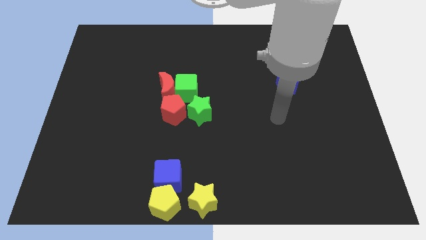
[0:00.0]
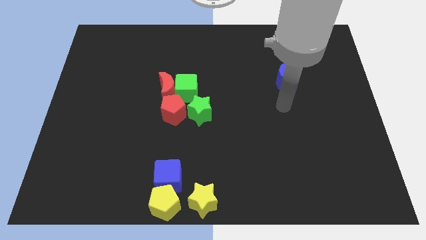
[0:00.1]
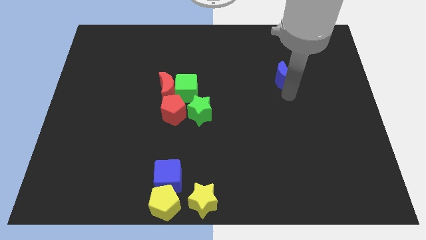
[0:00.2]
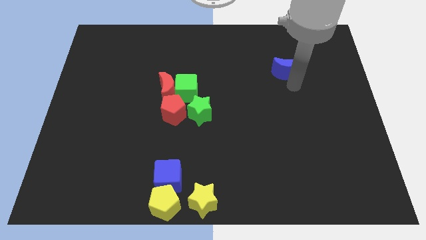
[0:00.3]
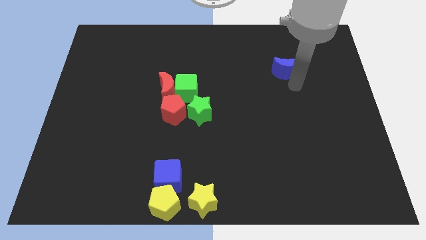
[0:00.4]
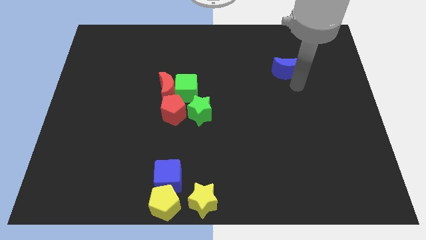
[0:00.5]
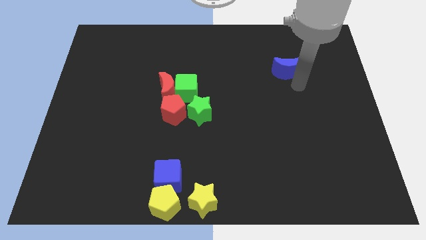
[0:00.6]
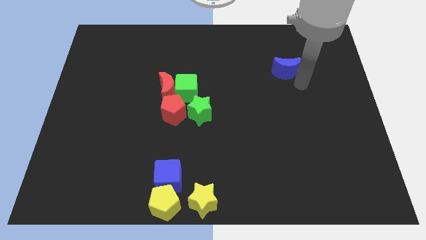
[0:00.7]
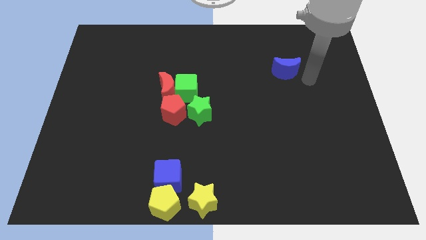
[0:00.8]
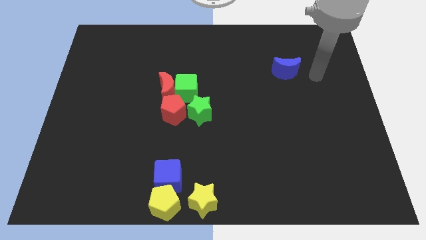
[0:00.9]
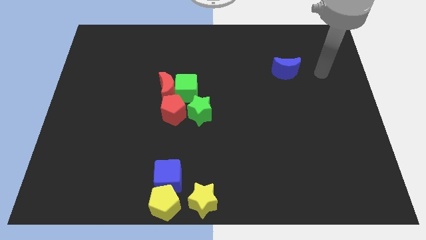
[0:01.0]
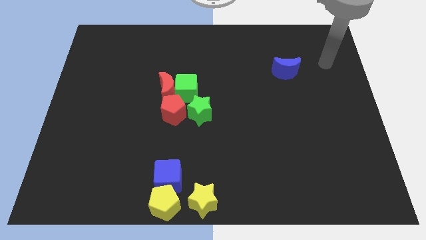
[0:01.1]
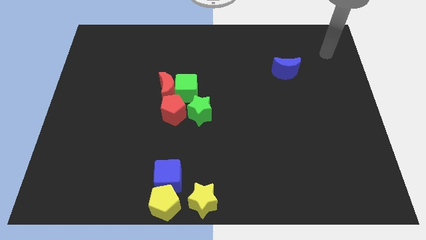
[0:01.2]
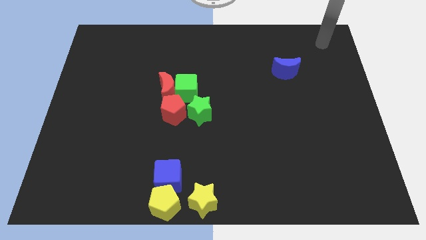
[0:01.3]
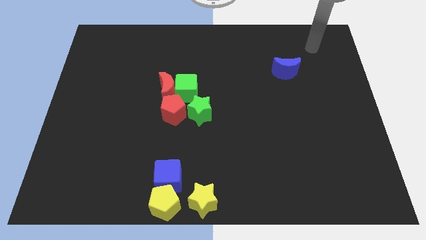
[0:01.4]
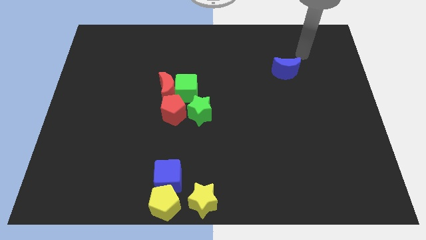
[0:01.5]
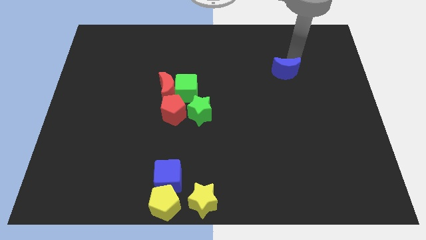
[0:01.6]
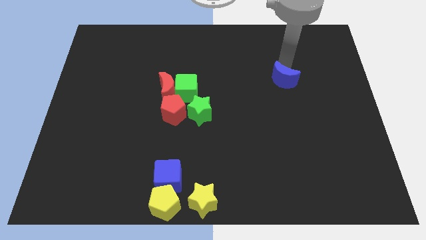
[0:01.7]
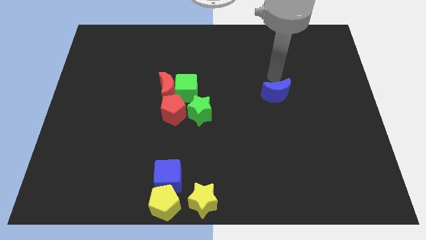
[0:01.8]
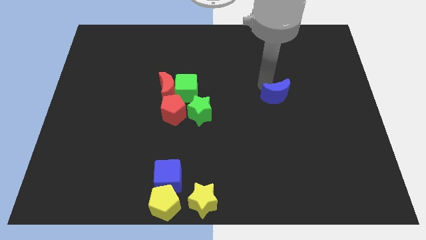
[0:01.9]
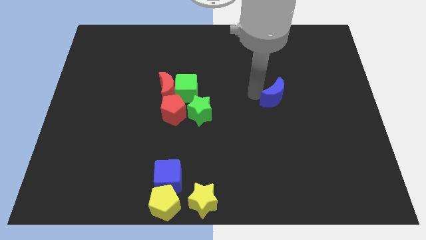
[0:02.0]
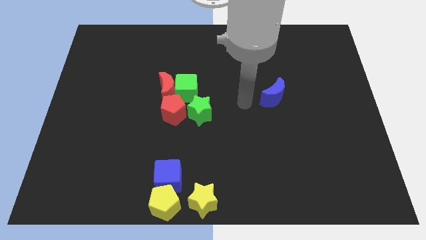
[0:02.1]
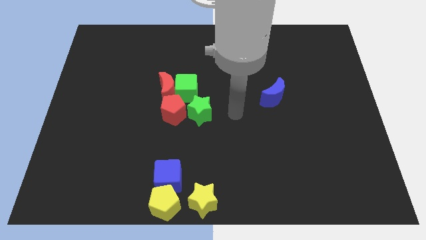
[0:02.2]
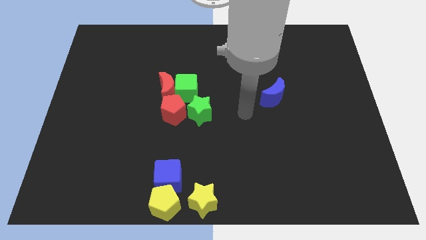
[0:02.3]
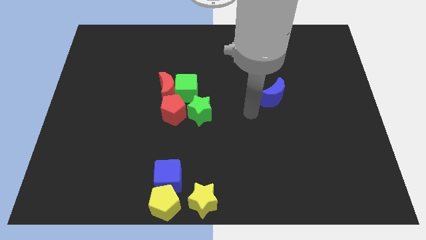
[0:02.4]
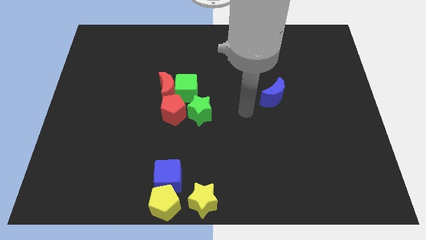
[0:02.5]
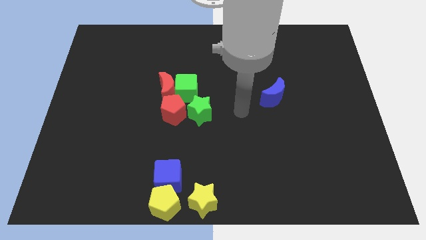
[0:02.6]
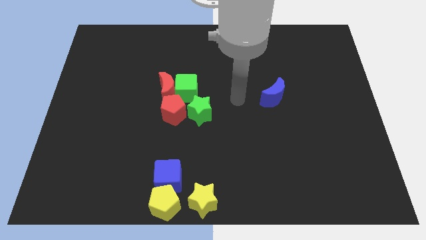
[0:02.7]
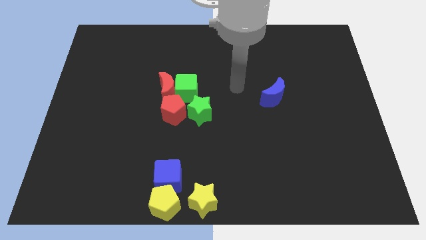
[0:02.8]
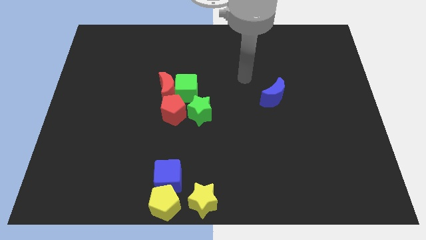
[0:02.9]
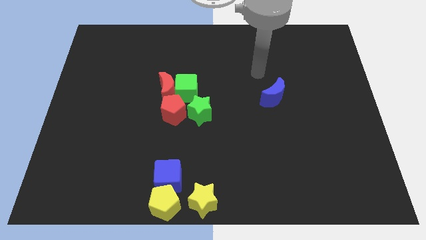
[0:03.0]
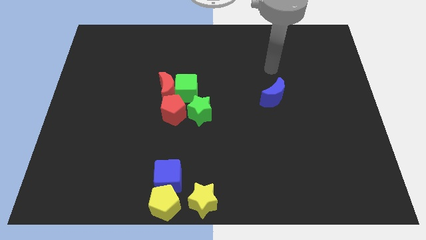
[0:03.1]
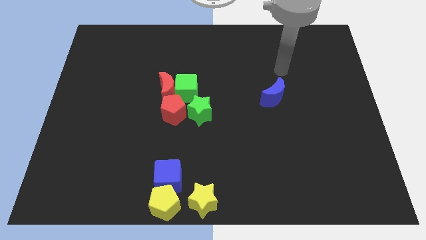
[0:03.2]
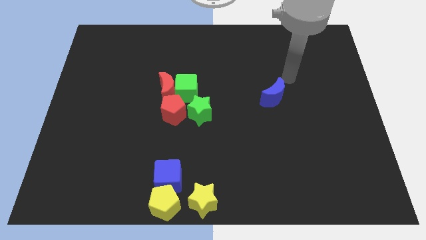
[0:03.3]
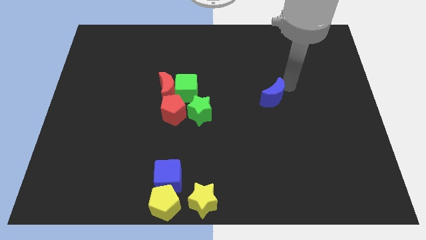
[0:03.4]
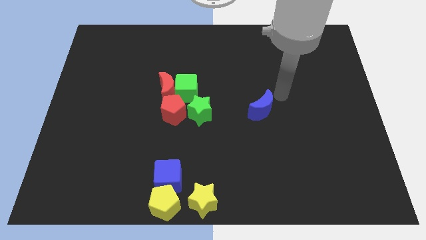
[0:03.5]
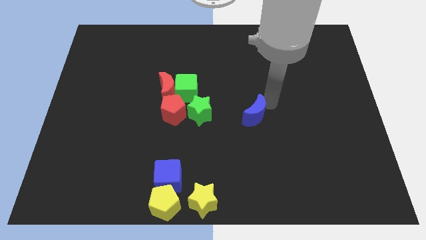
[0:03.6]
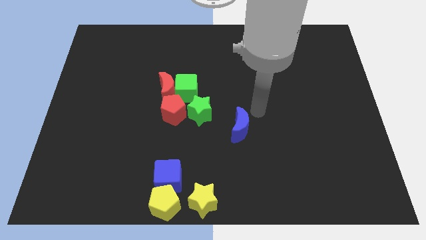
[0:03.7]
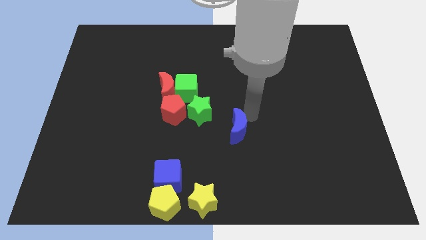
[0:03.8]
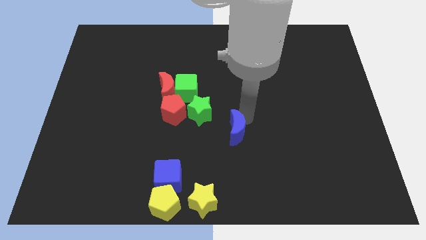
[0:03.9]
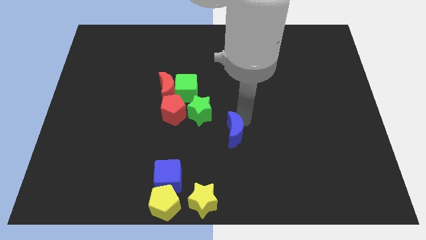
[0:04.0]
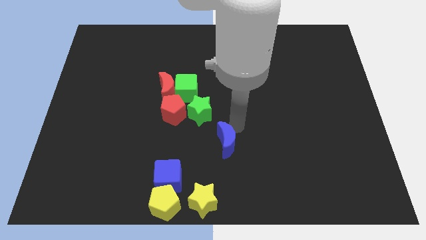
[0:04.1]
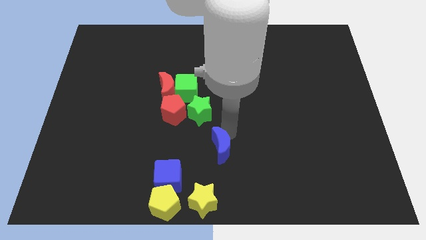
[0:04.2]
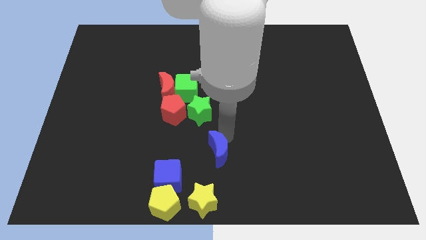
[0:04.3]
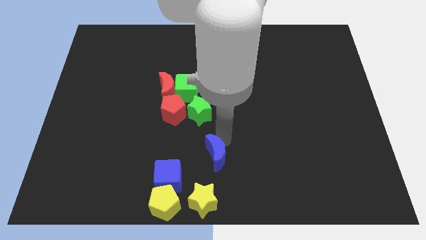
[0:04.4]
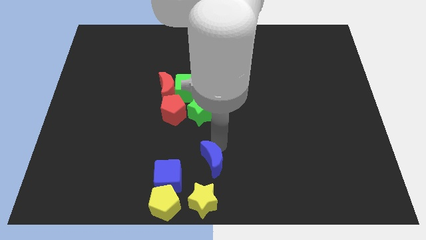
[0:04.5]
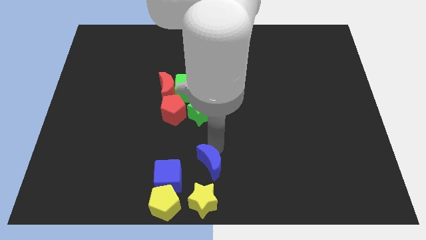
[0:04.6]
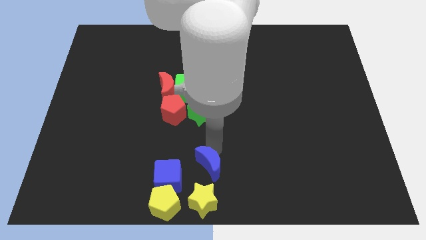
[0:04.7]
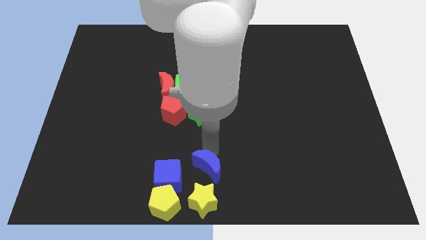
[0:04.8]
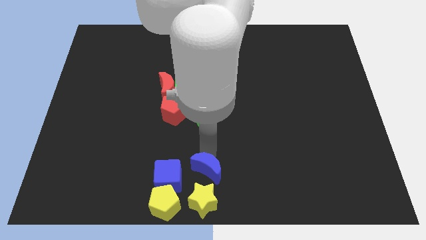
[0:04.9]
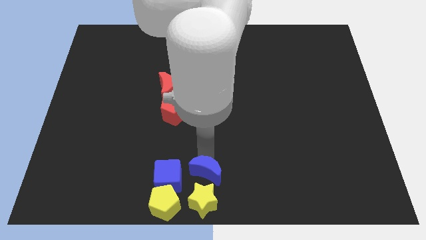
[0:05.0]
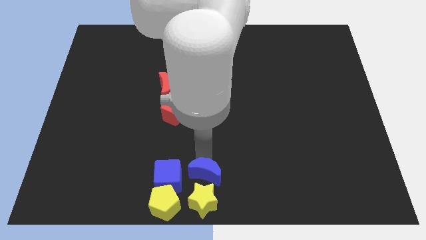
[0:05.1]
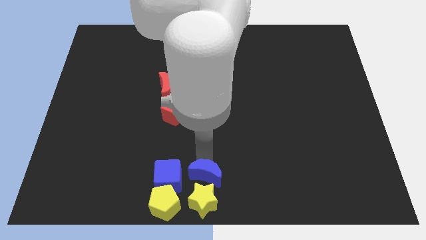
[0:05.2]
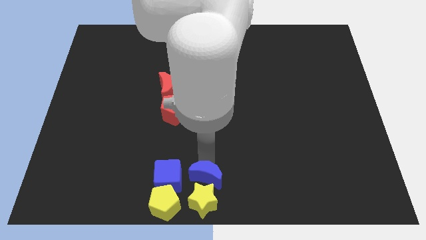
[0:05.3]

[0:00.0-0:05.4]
place the blue moon to the right of the blue cube

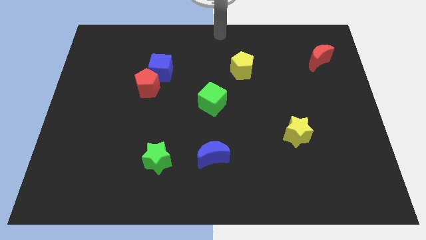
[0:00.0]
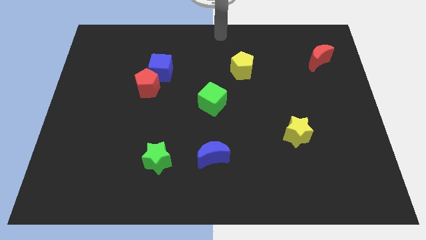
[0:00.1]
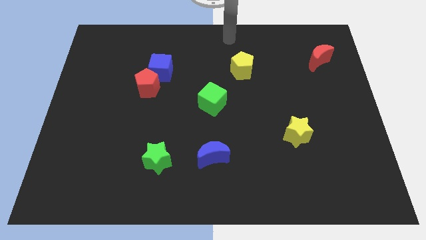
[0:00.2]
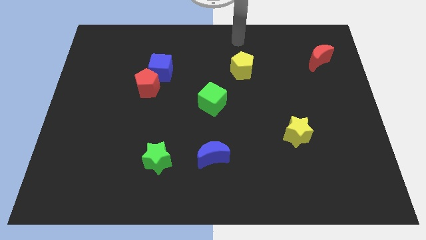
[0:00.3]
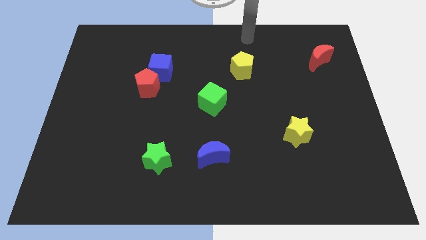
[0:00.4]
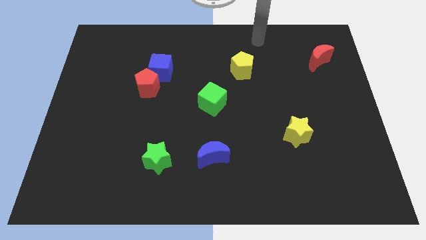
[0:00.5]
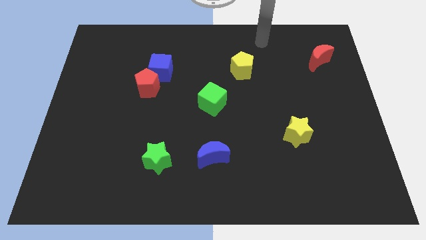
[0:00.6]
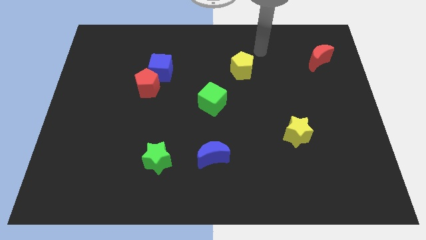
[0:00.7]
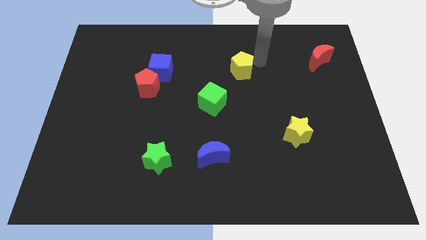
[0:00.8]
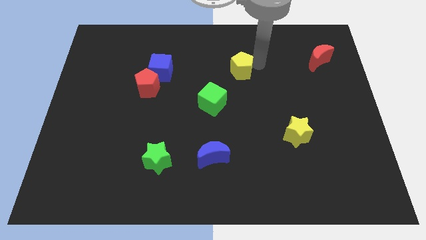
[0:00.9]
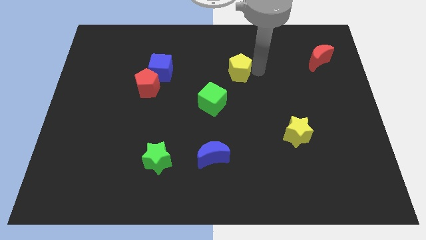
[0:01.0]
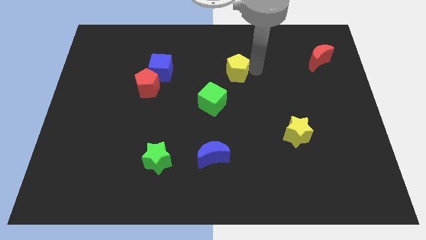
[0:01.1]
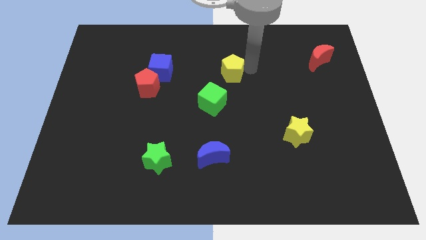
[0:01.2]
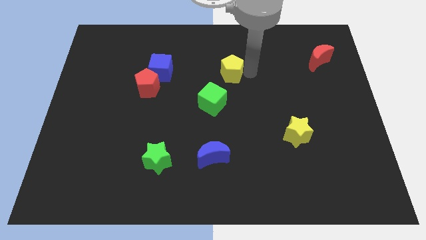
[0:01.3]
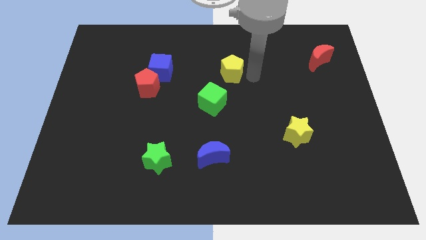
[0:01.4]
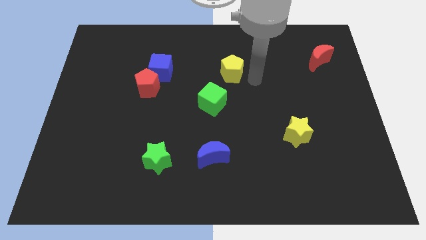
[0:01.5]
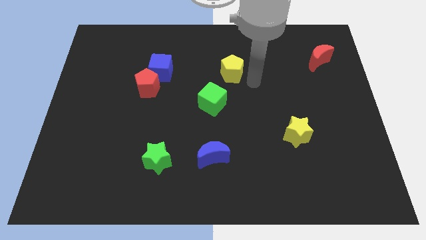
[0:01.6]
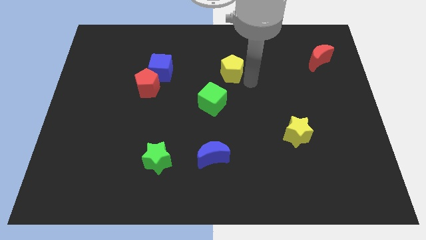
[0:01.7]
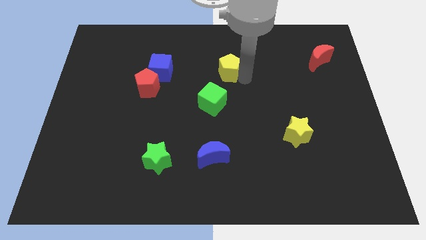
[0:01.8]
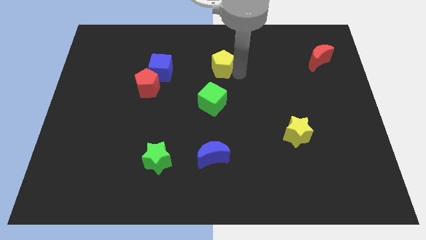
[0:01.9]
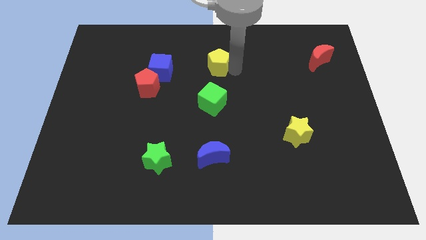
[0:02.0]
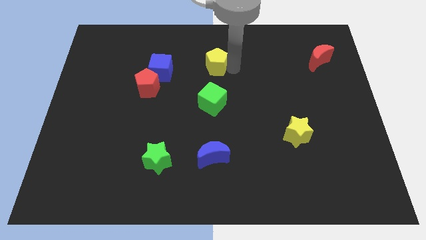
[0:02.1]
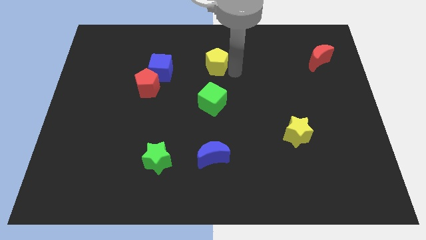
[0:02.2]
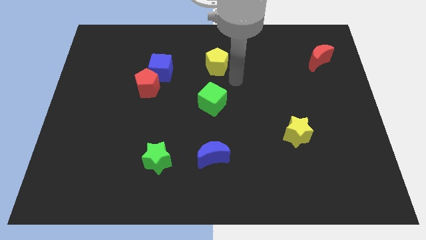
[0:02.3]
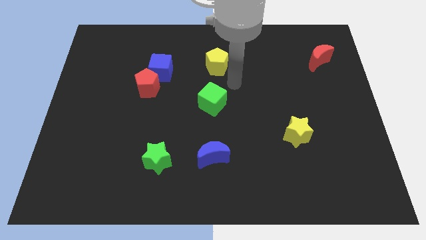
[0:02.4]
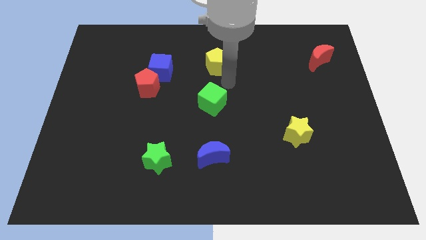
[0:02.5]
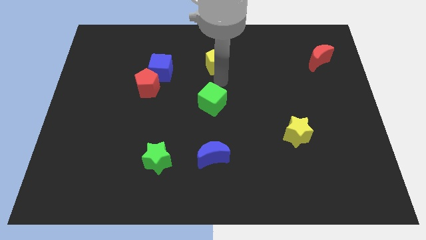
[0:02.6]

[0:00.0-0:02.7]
place the yellow pentagon above the green cube

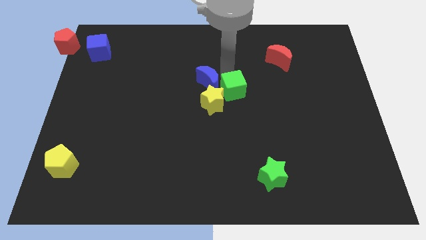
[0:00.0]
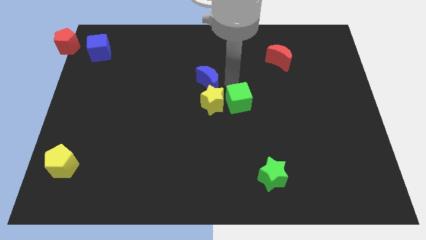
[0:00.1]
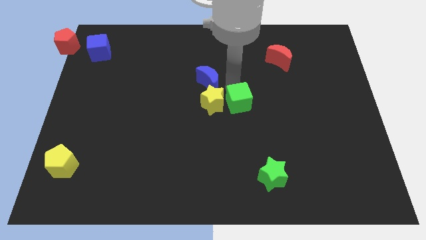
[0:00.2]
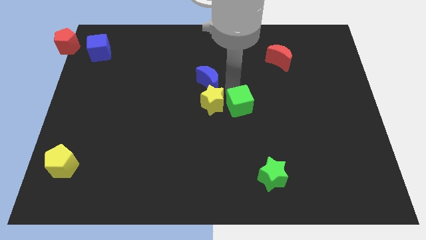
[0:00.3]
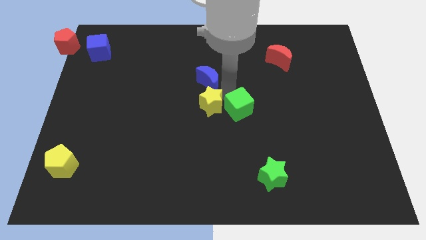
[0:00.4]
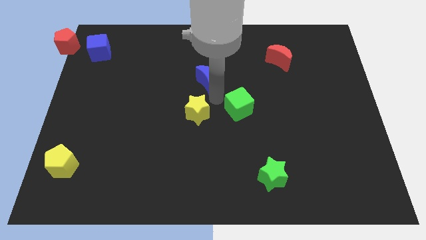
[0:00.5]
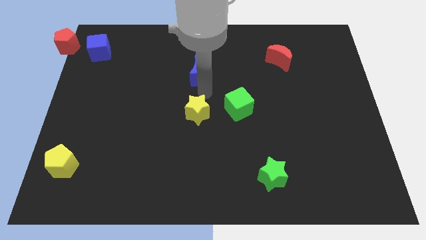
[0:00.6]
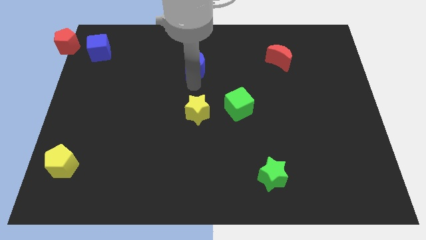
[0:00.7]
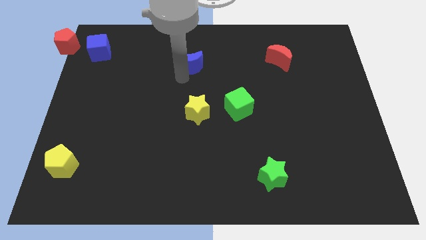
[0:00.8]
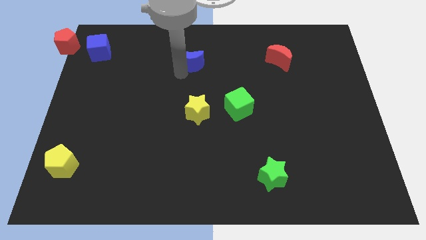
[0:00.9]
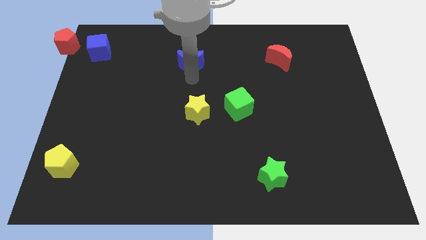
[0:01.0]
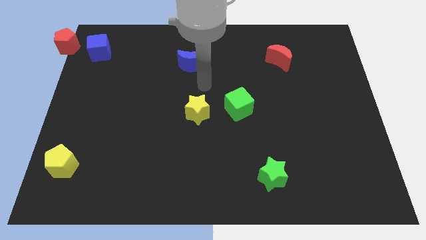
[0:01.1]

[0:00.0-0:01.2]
place blue crescent above yellow star
